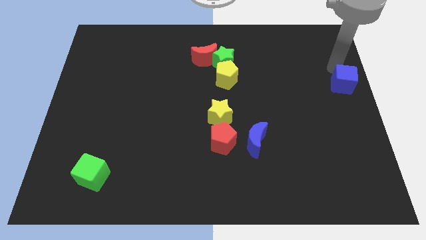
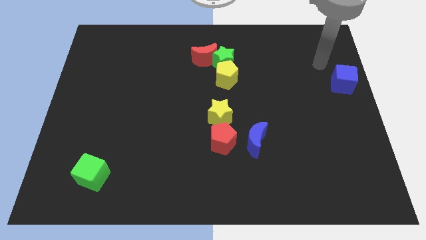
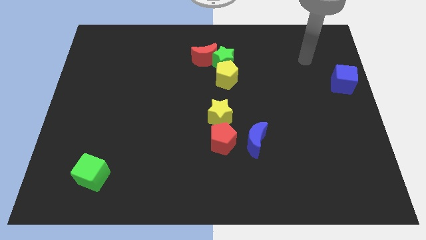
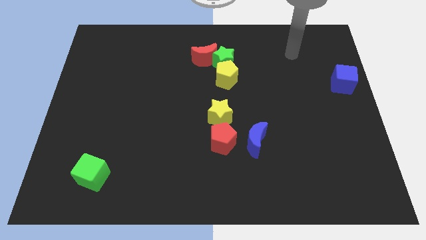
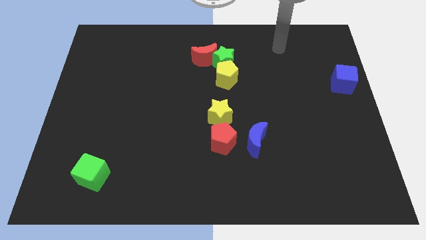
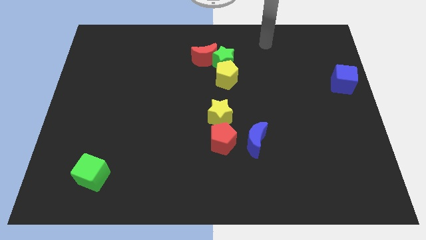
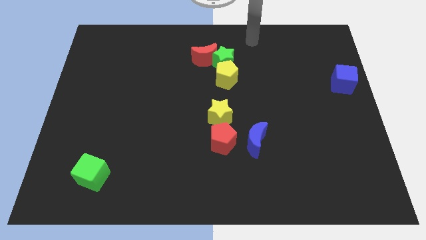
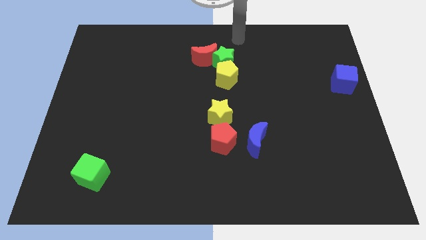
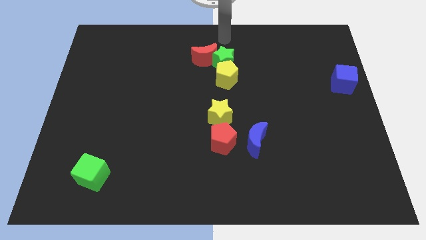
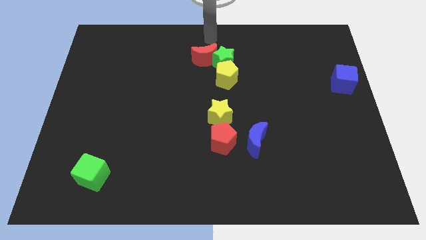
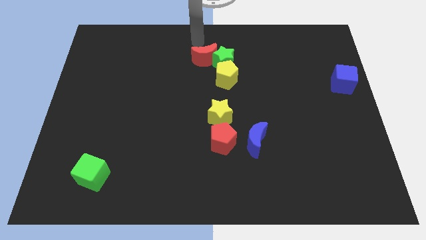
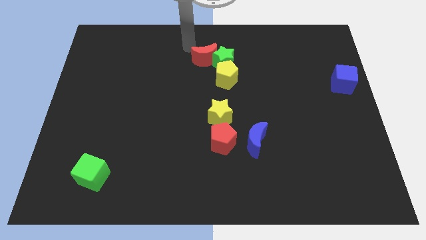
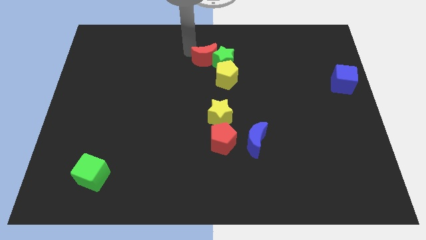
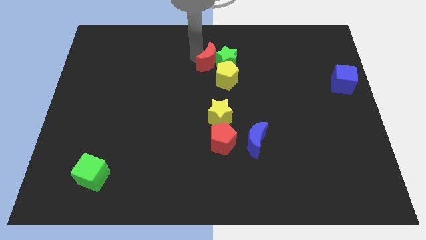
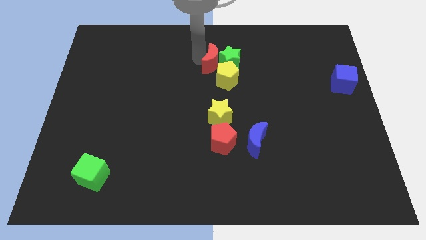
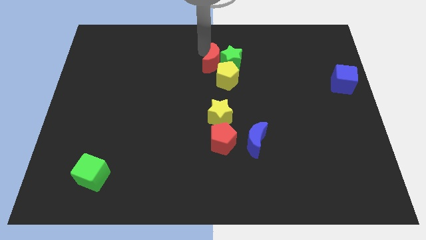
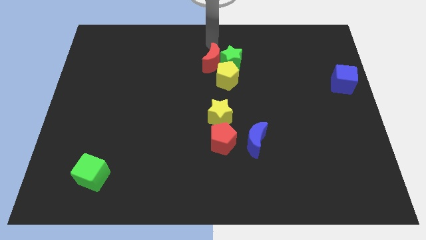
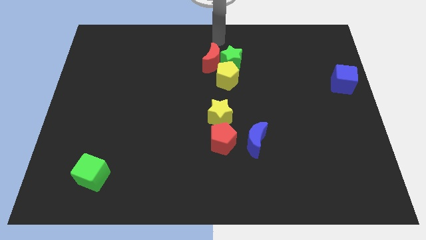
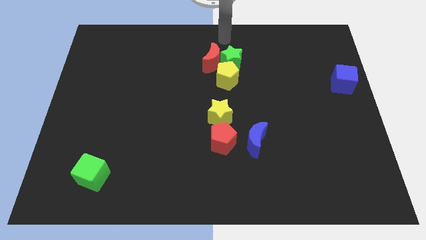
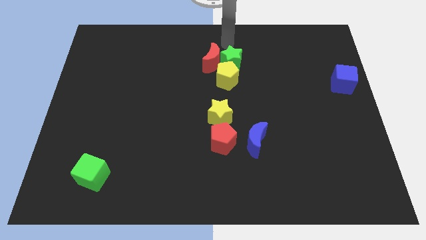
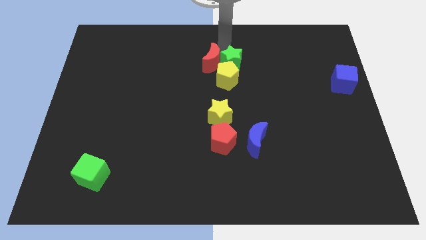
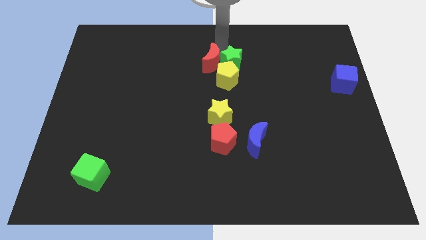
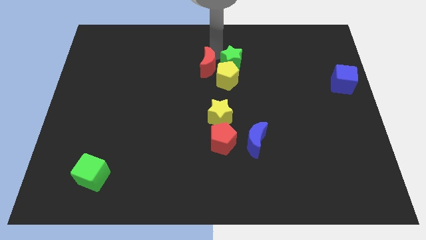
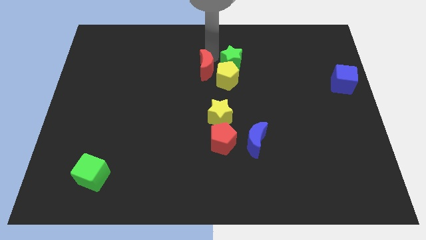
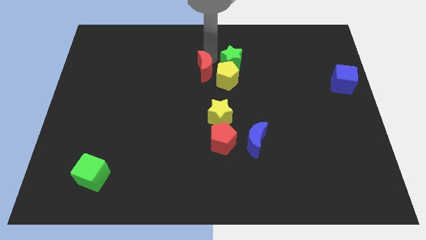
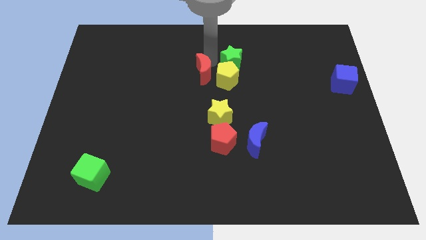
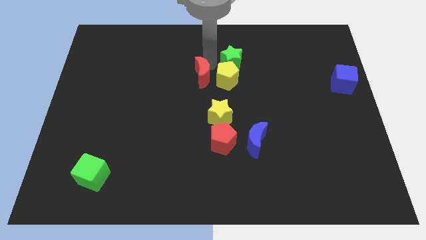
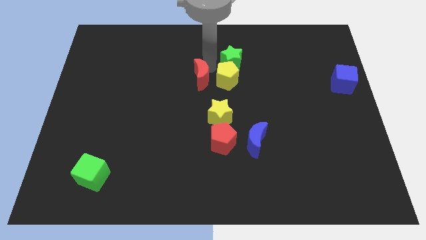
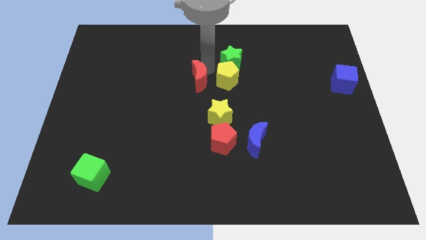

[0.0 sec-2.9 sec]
move the red crescent to the left of the yellow pentagon

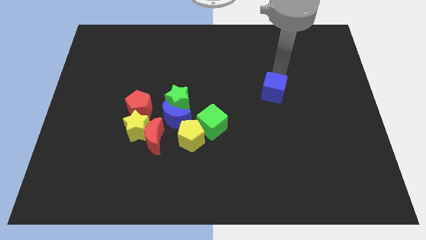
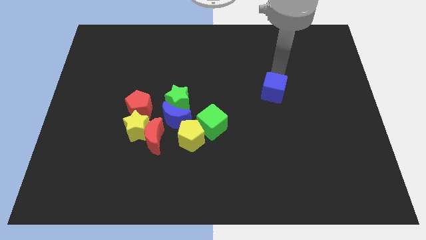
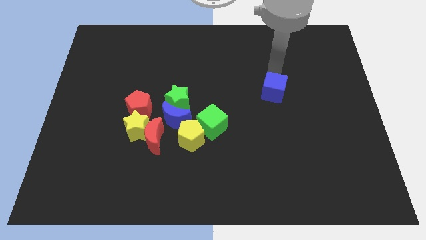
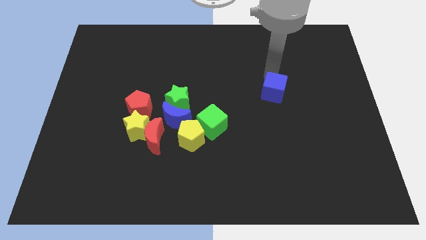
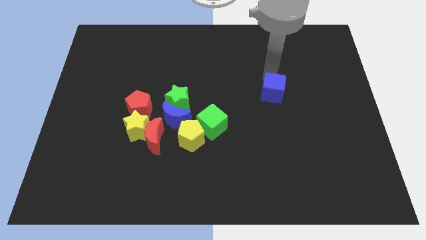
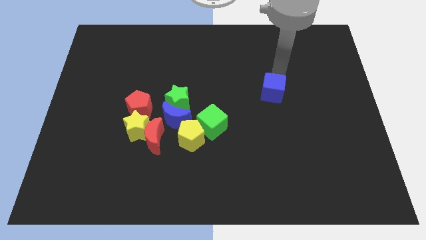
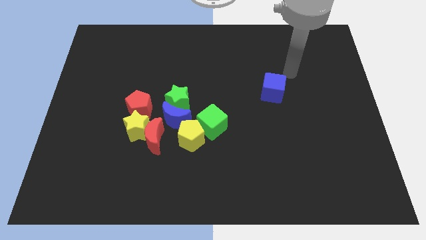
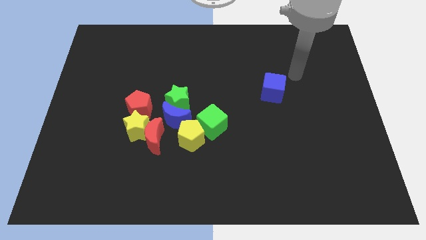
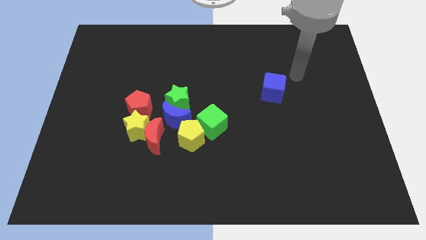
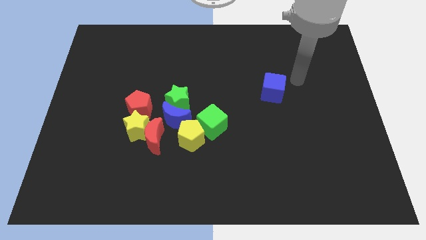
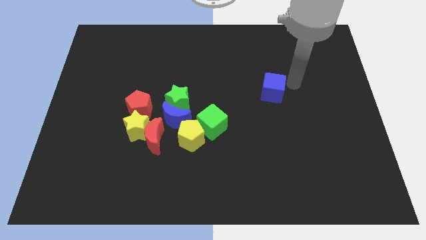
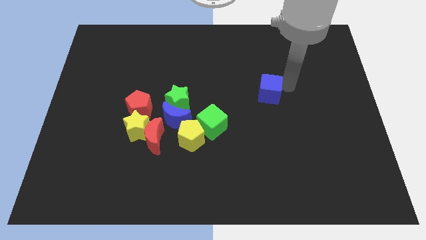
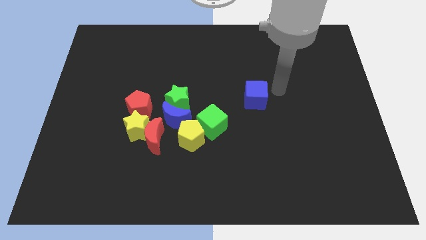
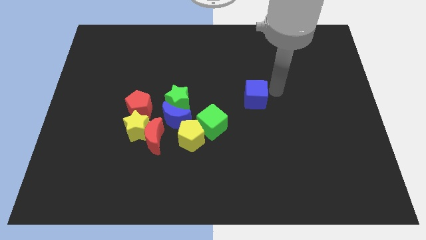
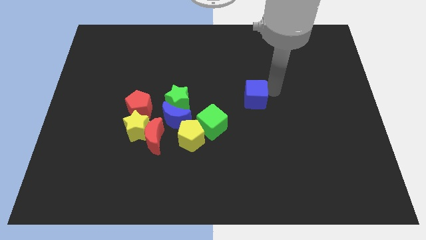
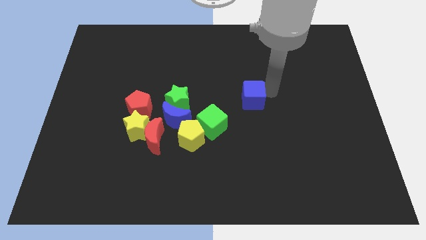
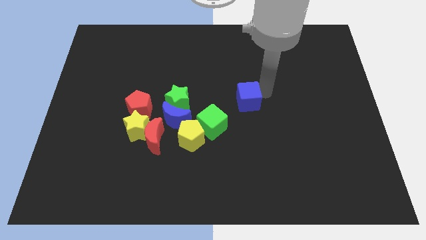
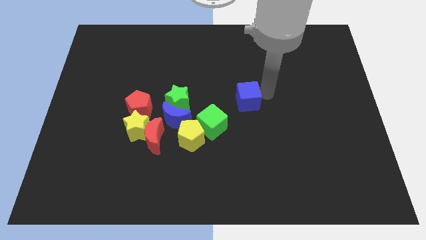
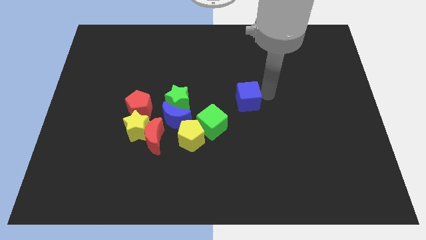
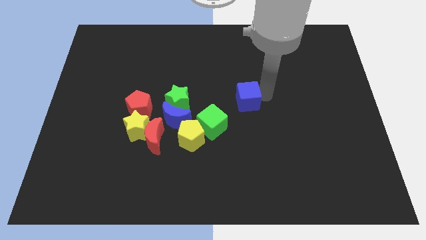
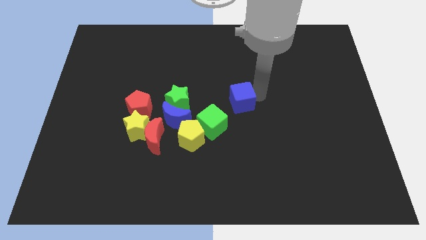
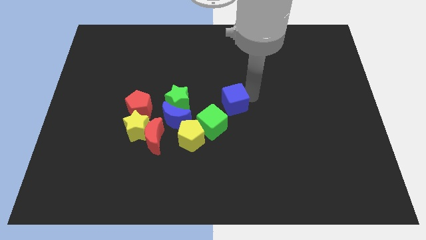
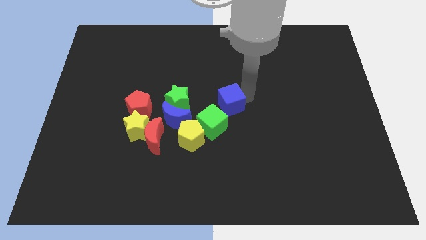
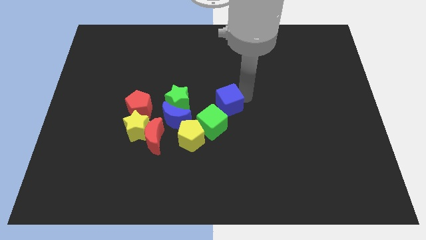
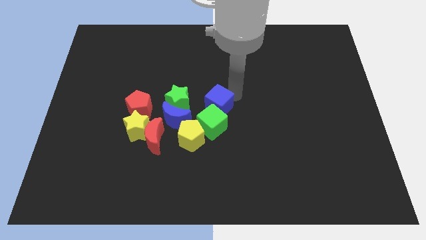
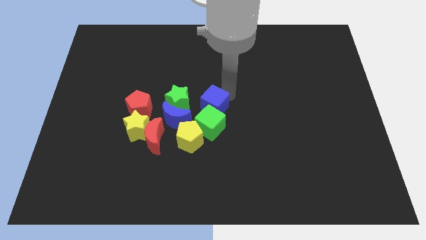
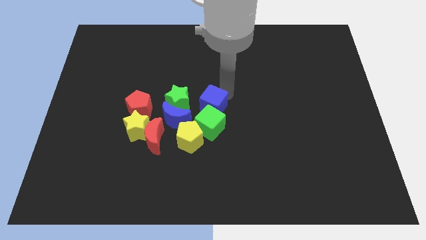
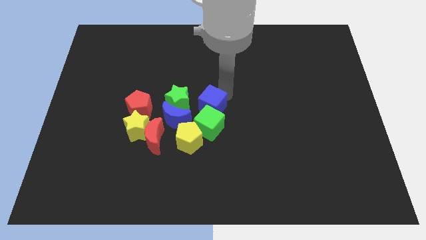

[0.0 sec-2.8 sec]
push the blue cube to the top of the green cube

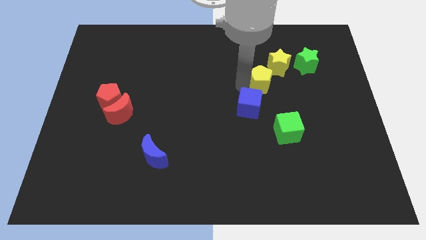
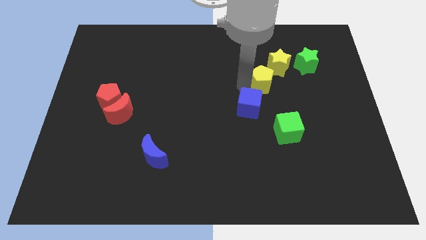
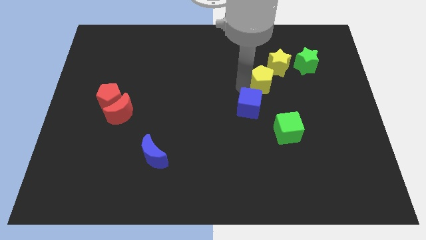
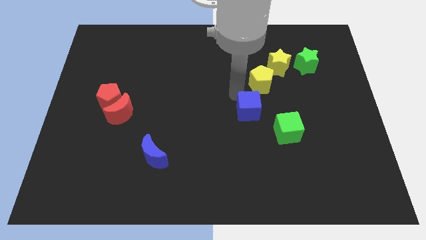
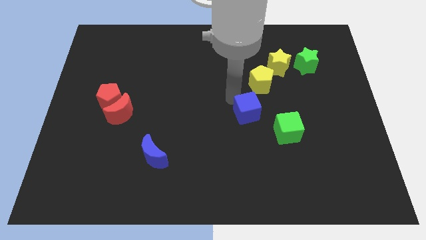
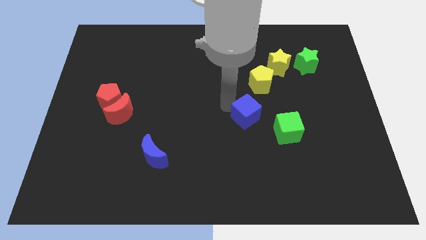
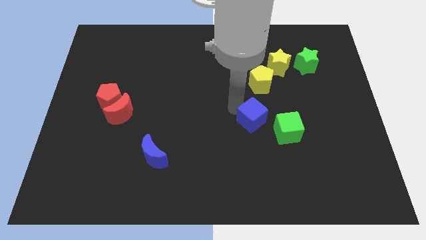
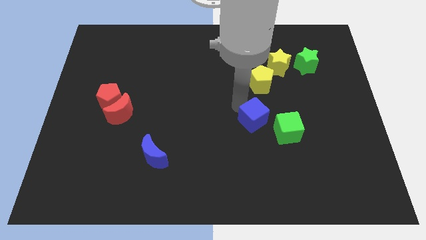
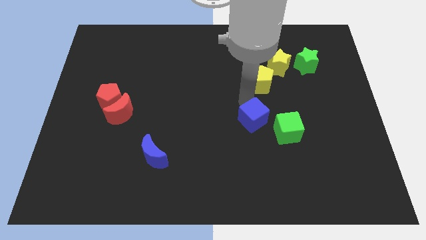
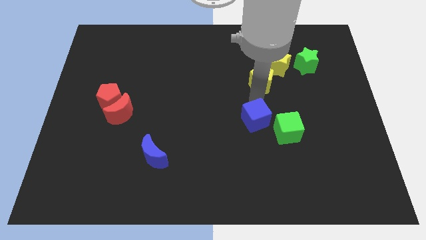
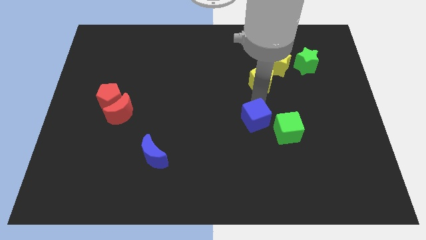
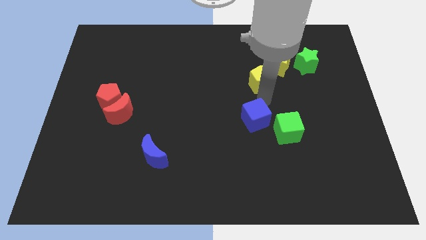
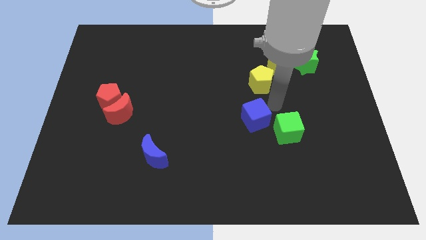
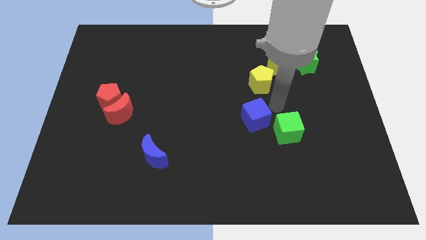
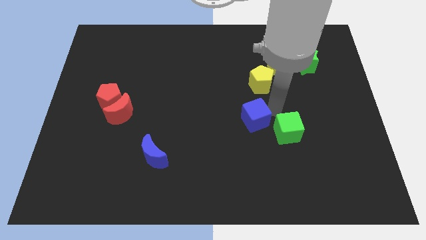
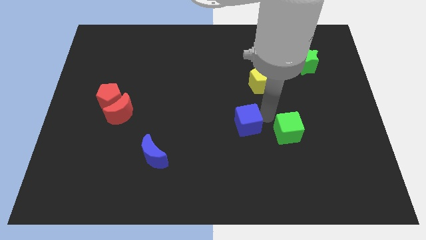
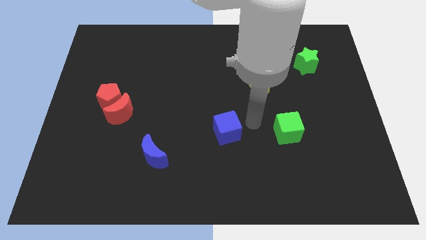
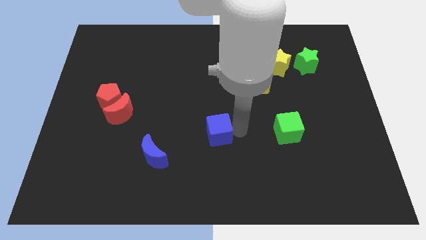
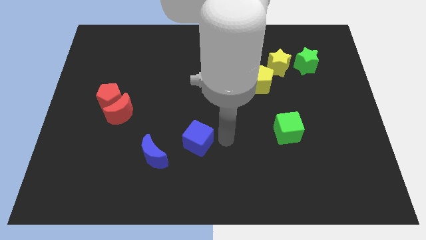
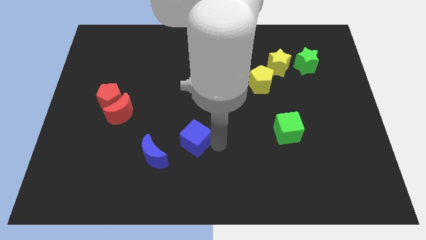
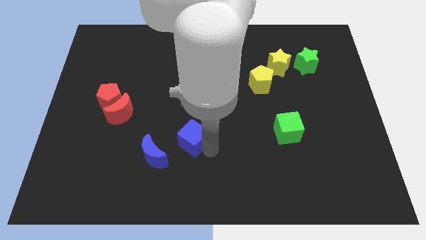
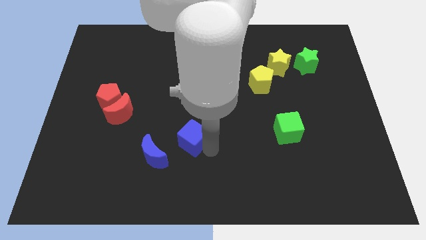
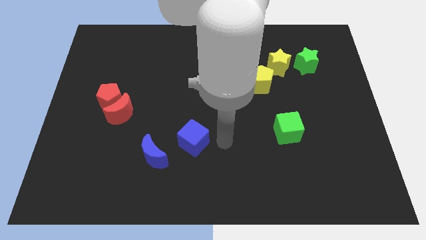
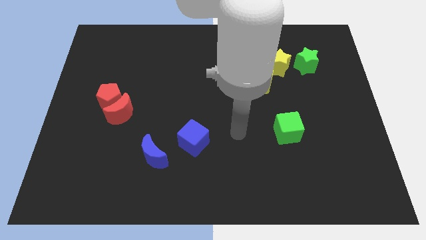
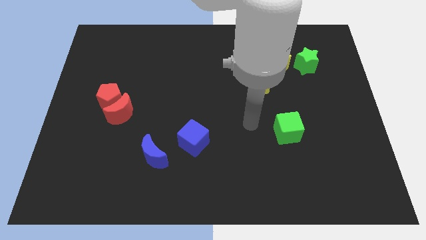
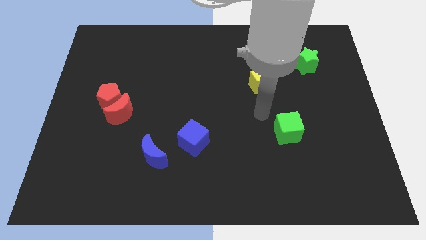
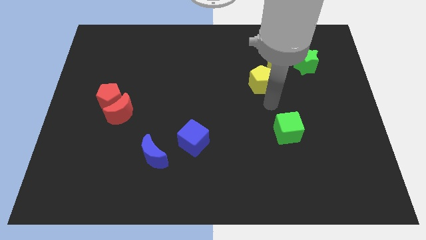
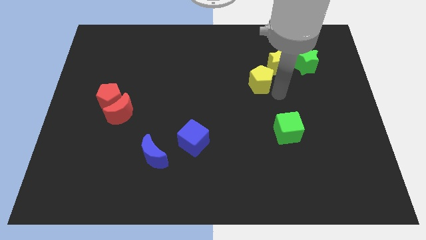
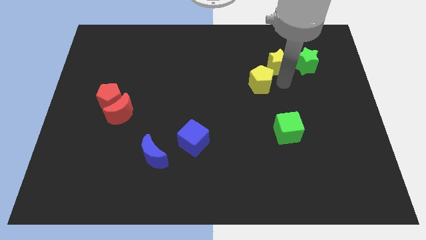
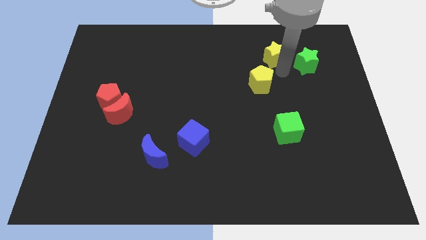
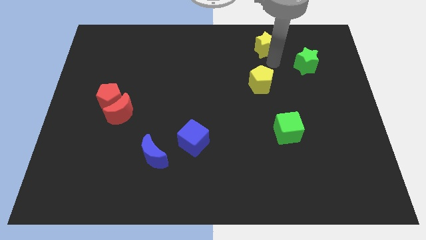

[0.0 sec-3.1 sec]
place the blue cube in between the green cube and blue moon
